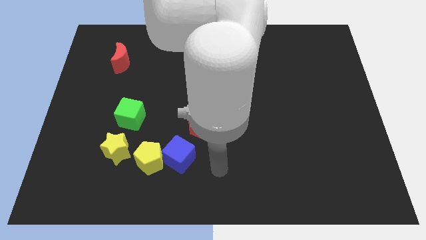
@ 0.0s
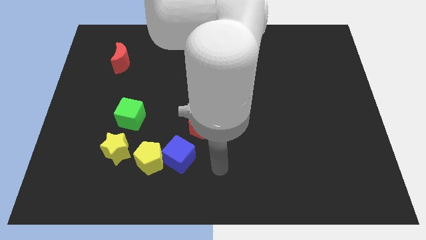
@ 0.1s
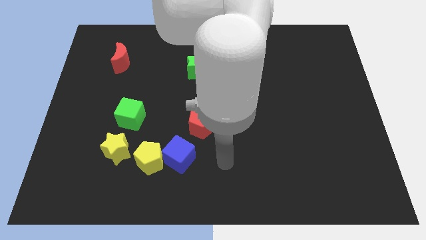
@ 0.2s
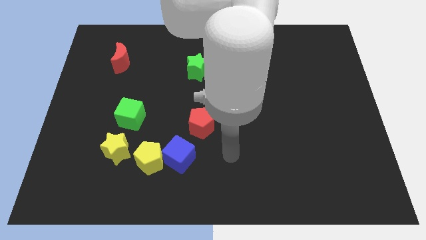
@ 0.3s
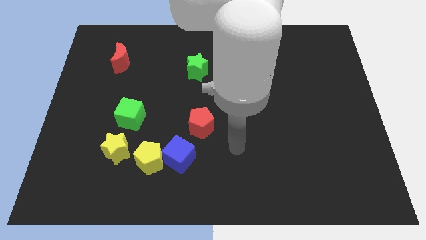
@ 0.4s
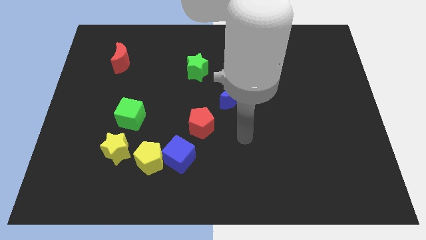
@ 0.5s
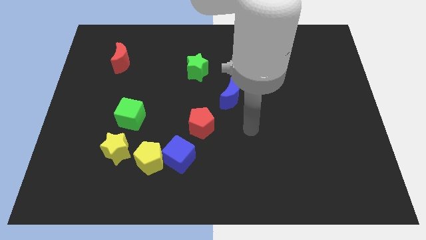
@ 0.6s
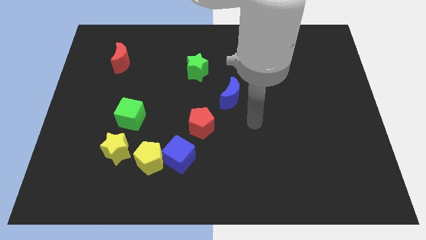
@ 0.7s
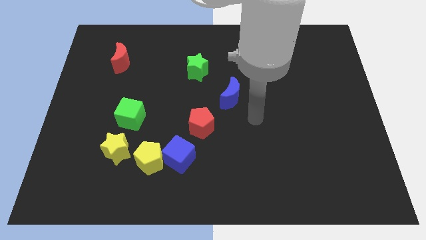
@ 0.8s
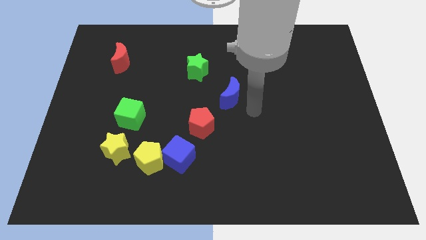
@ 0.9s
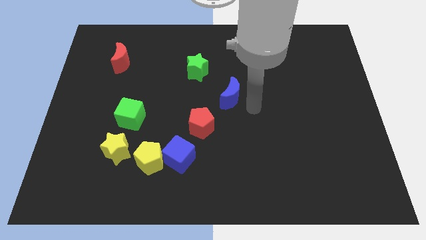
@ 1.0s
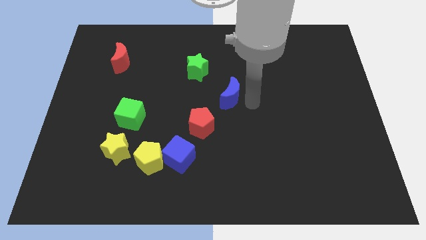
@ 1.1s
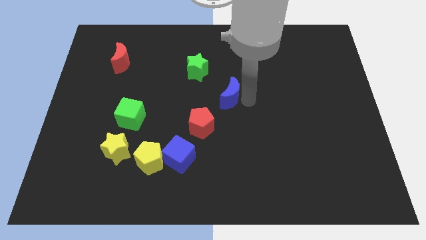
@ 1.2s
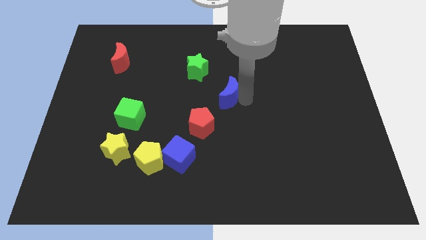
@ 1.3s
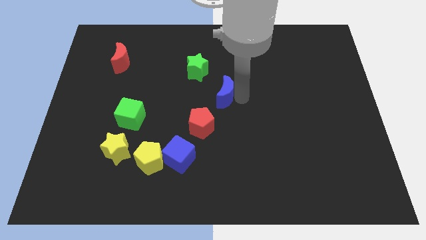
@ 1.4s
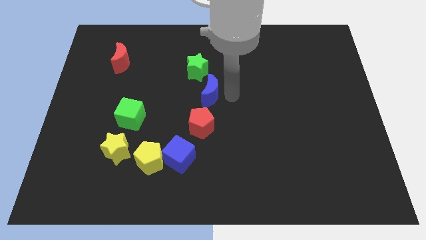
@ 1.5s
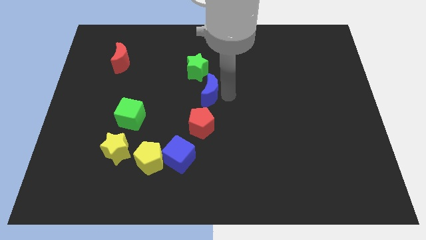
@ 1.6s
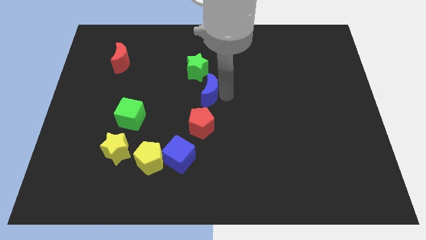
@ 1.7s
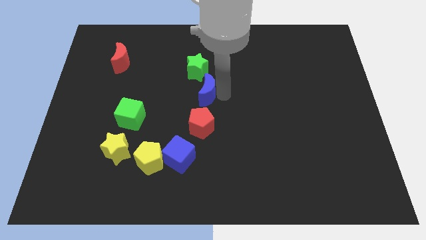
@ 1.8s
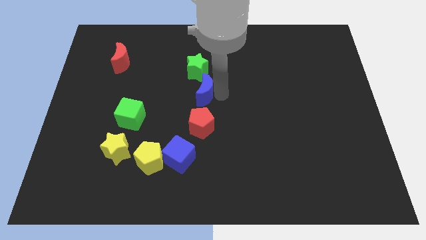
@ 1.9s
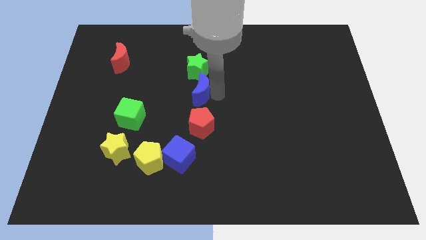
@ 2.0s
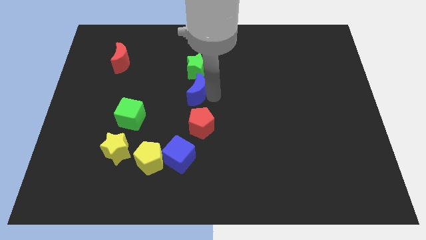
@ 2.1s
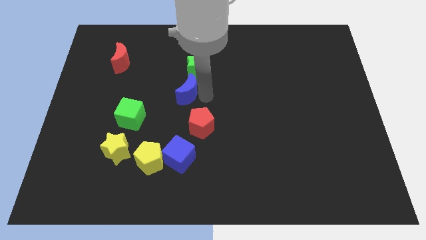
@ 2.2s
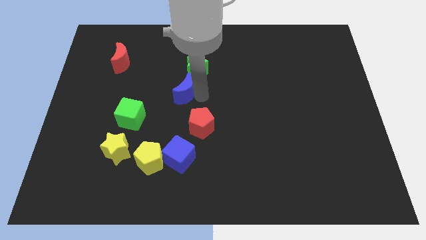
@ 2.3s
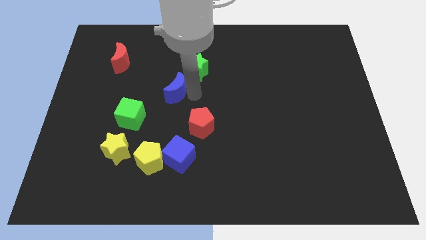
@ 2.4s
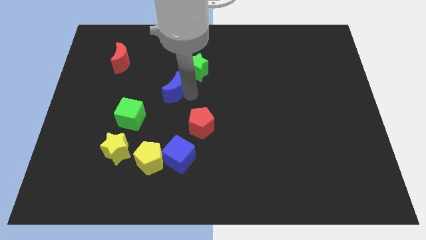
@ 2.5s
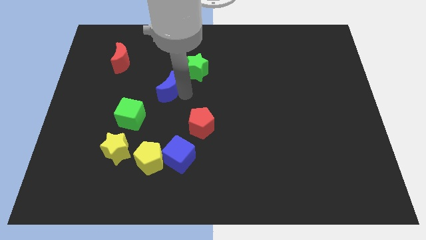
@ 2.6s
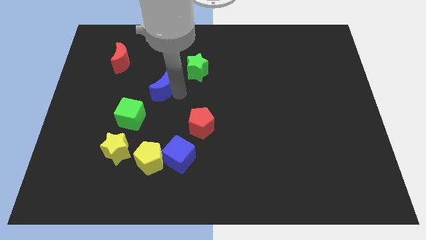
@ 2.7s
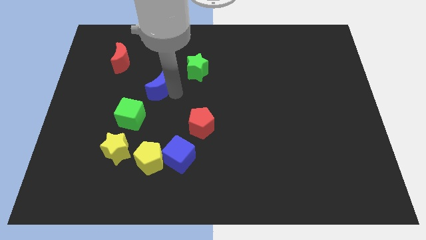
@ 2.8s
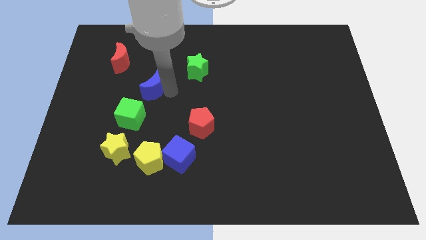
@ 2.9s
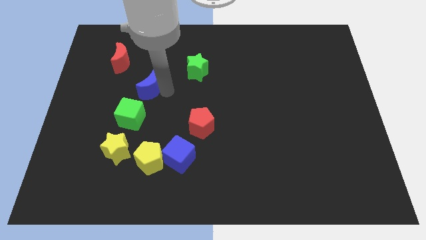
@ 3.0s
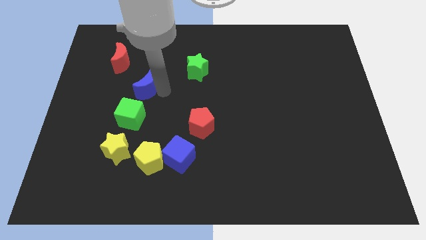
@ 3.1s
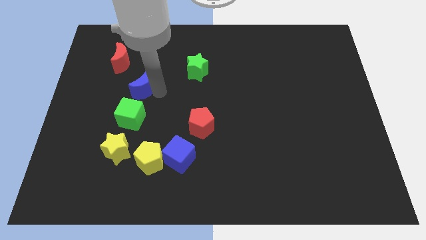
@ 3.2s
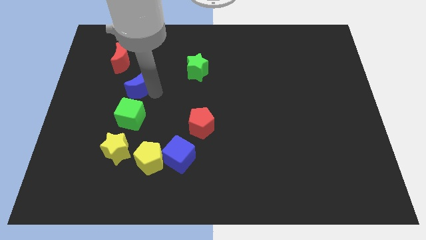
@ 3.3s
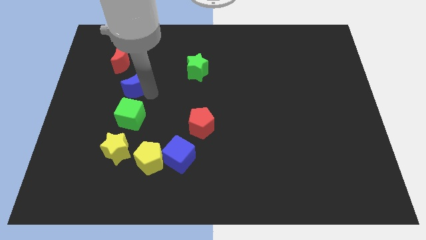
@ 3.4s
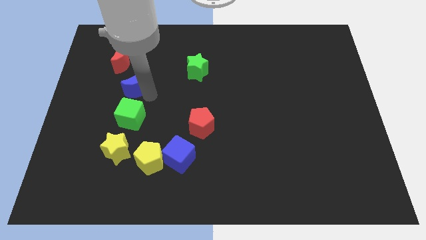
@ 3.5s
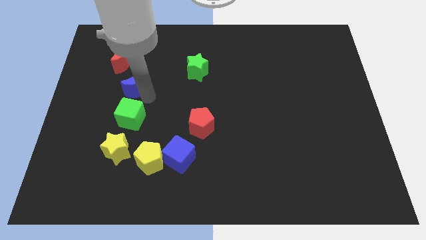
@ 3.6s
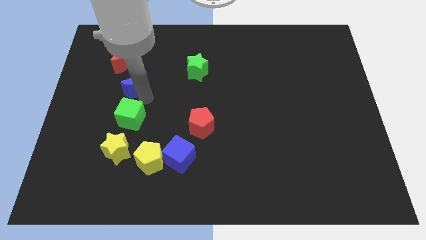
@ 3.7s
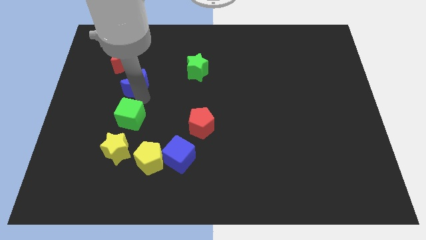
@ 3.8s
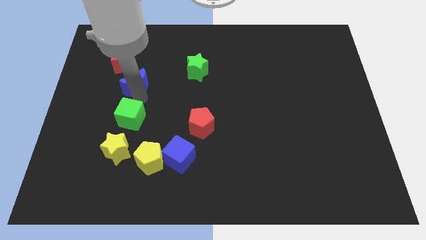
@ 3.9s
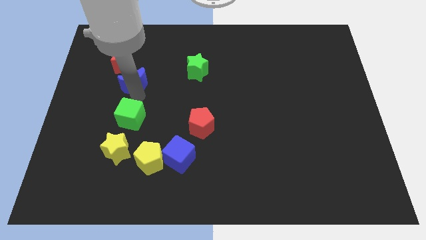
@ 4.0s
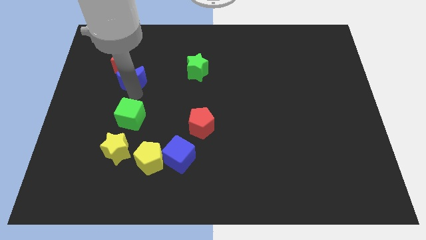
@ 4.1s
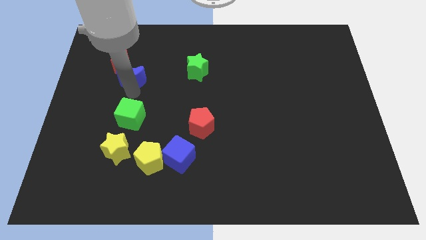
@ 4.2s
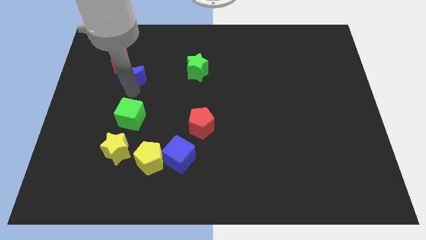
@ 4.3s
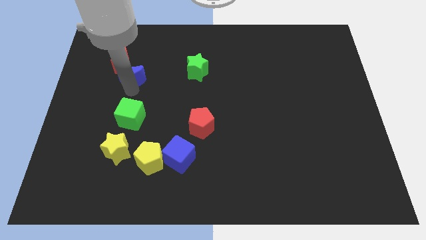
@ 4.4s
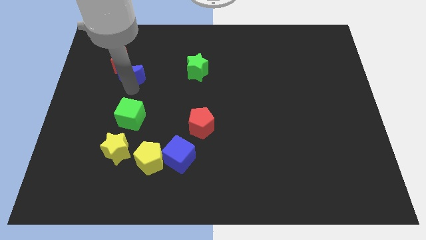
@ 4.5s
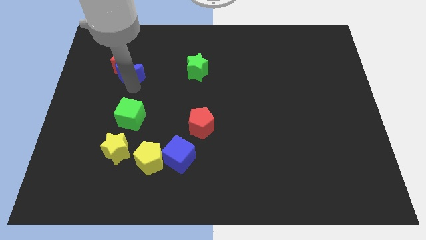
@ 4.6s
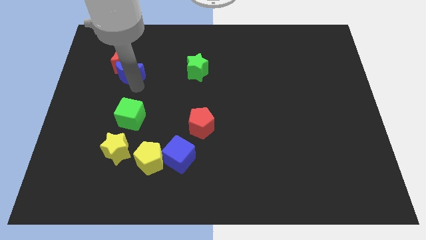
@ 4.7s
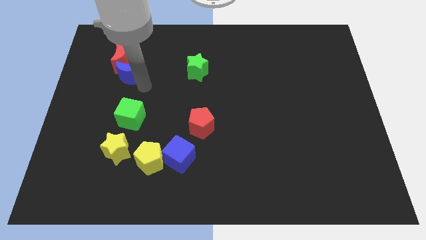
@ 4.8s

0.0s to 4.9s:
push the blue moon to the red moon

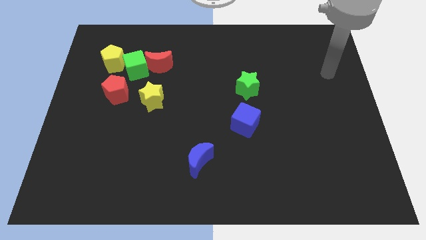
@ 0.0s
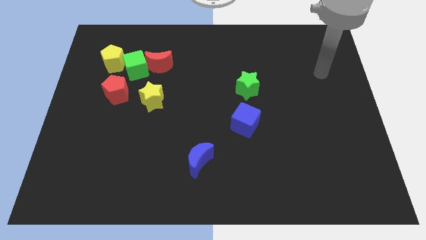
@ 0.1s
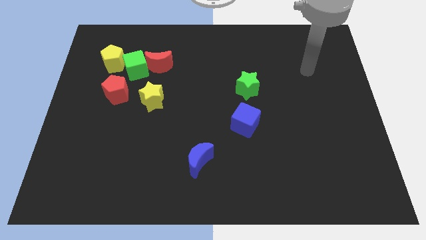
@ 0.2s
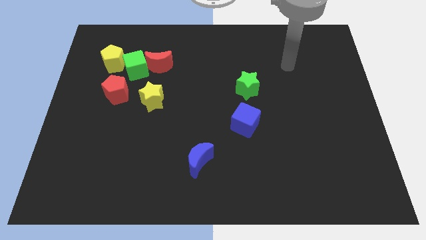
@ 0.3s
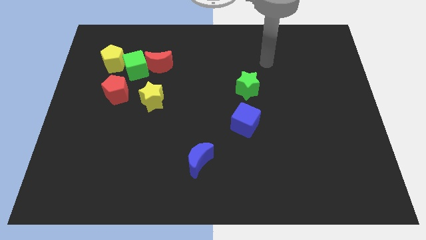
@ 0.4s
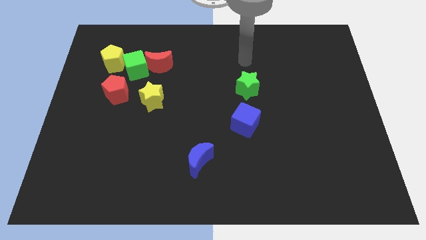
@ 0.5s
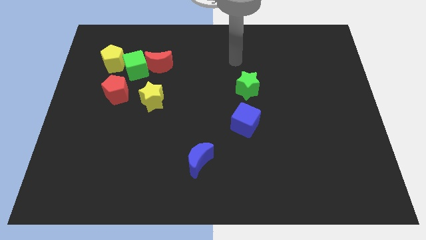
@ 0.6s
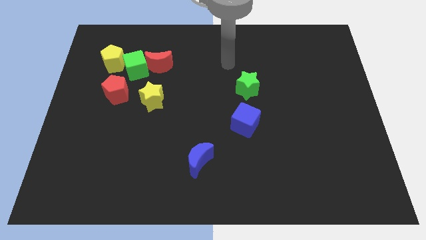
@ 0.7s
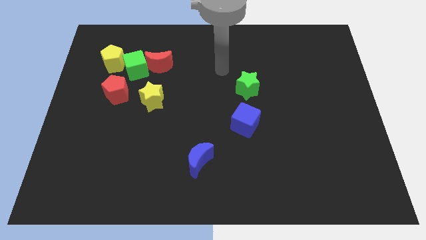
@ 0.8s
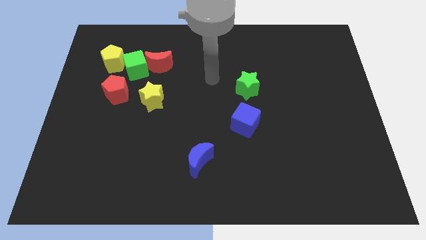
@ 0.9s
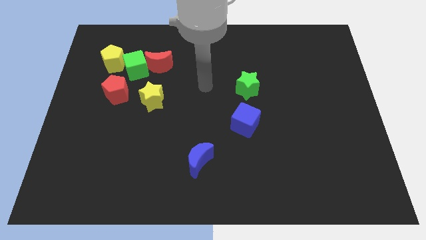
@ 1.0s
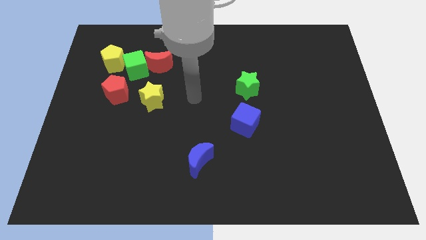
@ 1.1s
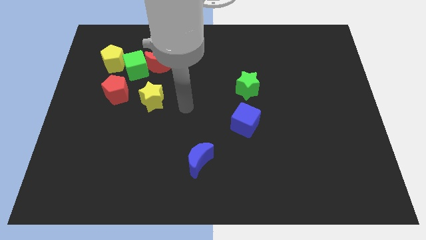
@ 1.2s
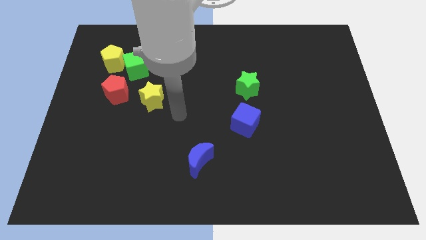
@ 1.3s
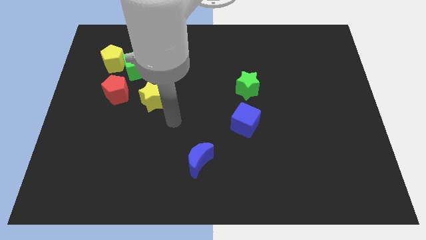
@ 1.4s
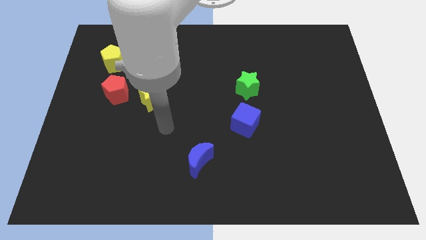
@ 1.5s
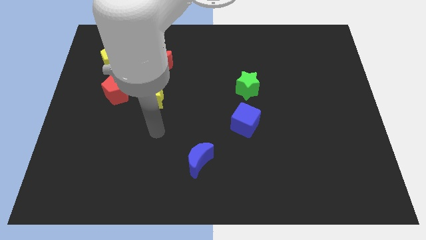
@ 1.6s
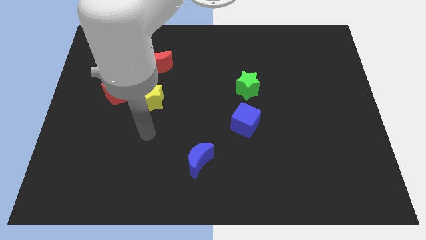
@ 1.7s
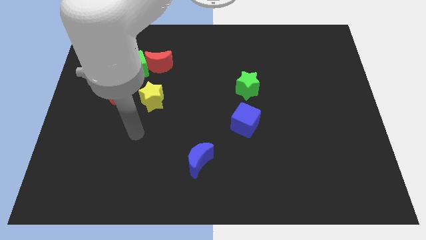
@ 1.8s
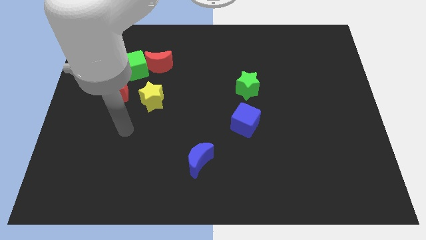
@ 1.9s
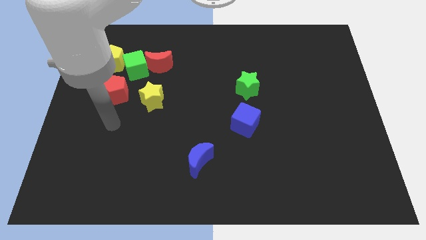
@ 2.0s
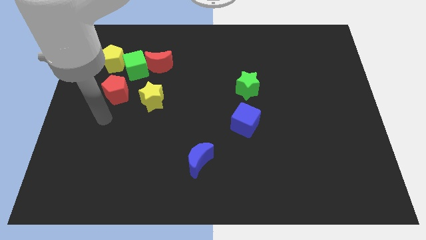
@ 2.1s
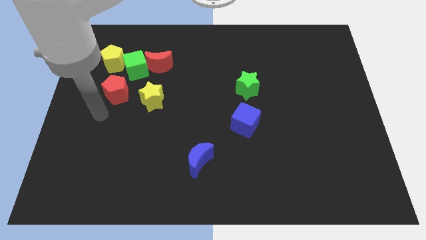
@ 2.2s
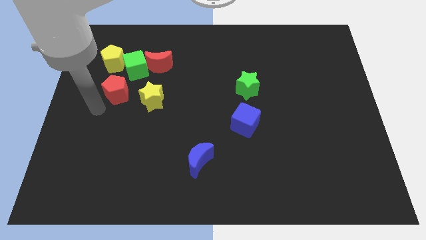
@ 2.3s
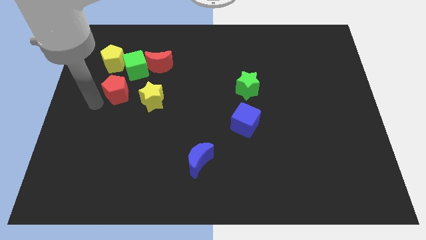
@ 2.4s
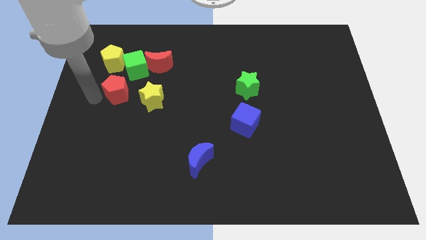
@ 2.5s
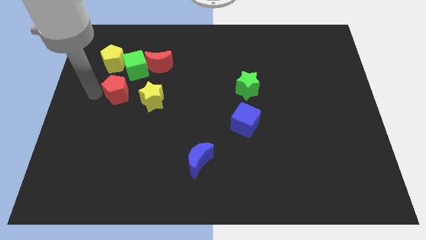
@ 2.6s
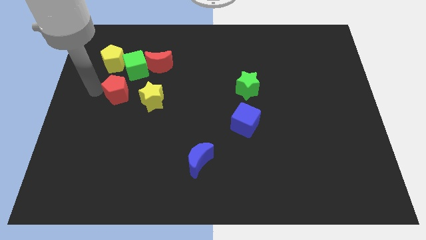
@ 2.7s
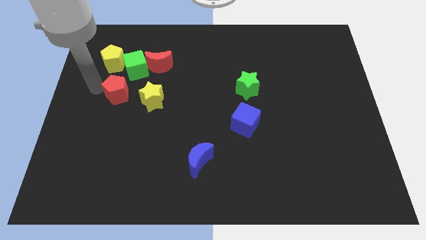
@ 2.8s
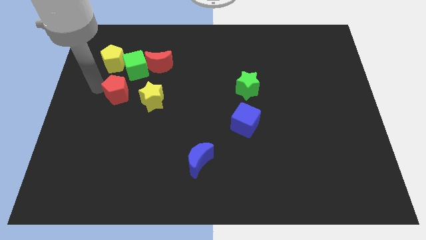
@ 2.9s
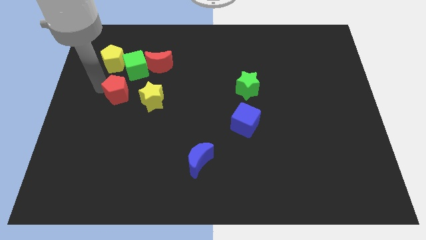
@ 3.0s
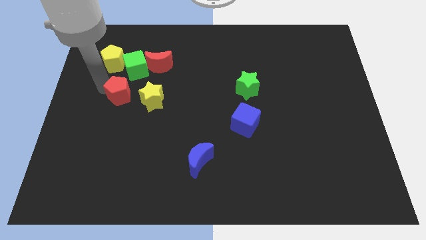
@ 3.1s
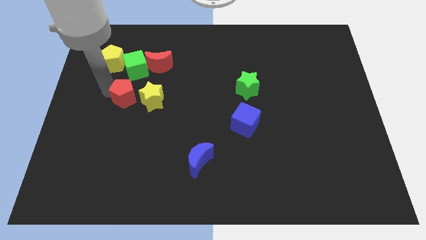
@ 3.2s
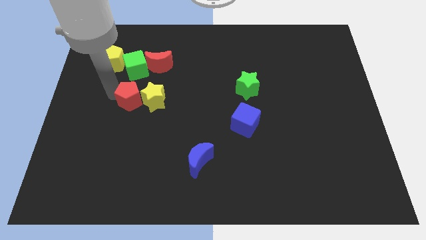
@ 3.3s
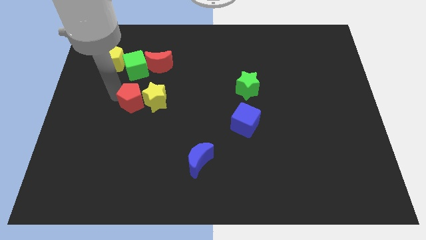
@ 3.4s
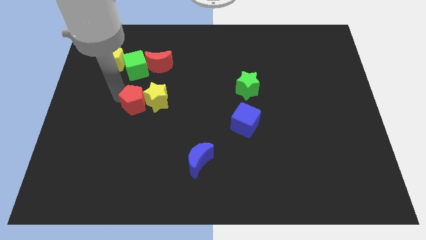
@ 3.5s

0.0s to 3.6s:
push the red pentagon to the yellow star

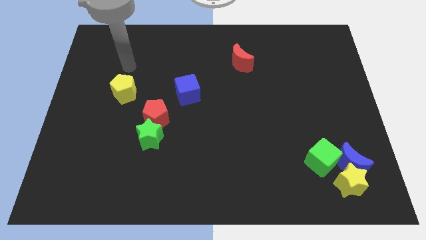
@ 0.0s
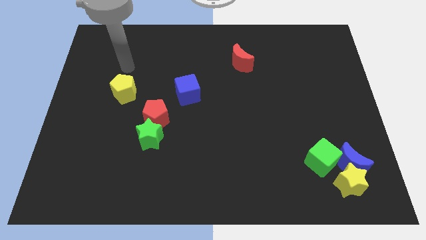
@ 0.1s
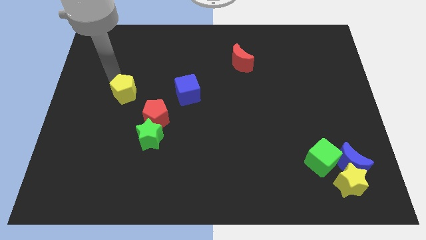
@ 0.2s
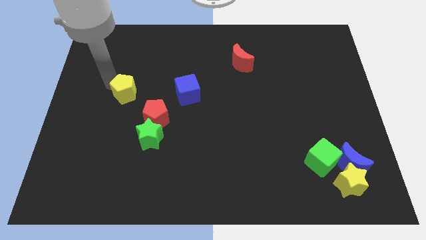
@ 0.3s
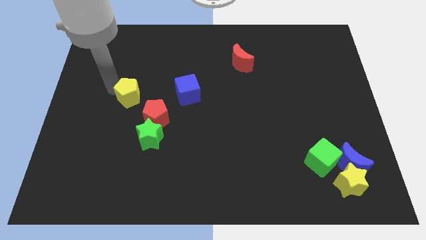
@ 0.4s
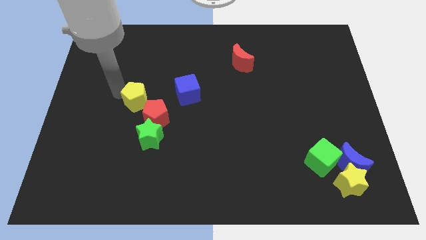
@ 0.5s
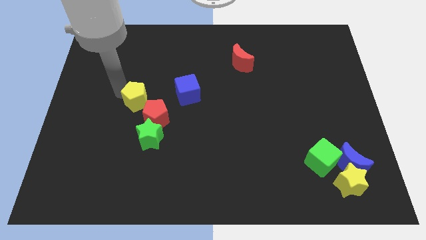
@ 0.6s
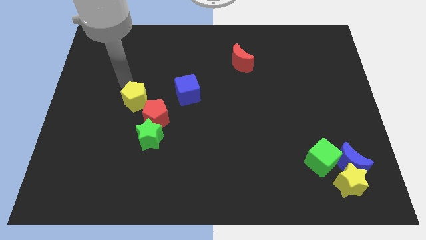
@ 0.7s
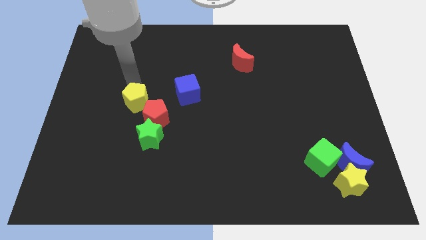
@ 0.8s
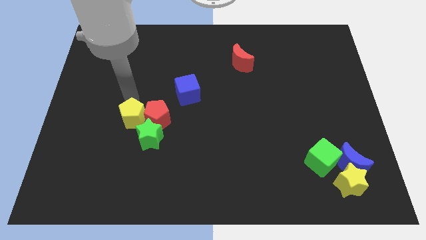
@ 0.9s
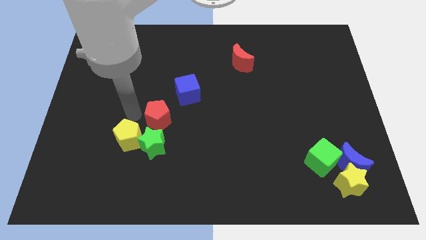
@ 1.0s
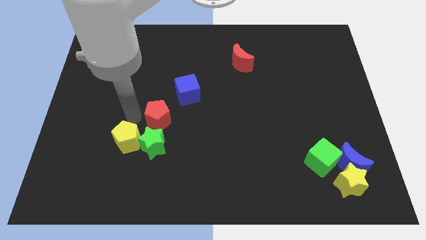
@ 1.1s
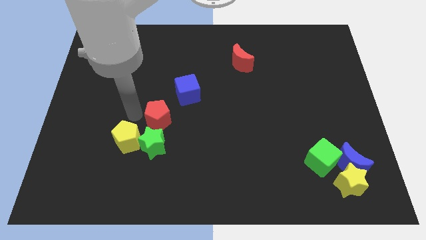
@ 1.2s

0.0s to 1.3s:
slide the yellow pentagon close to the green star
